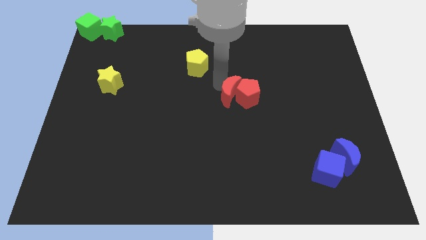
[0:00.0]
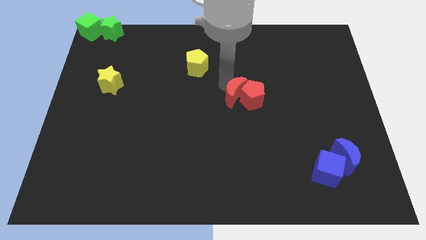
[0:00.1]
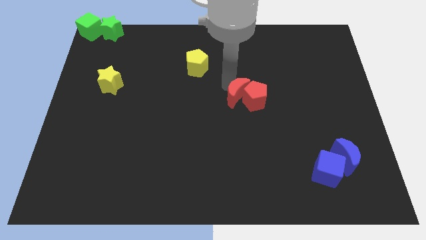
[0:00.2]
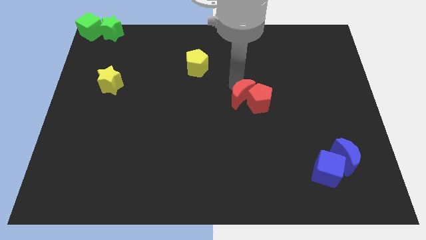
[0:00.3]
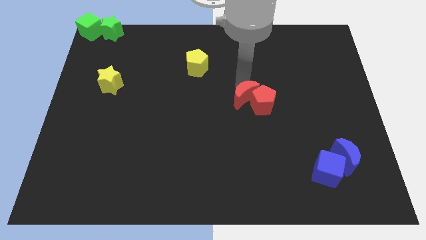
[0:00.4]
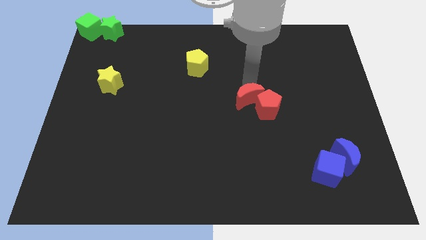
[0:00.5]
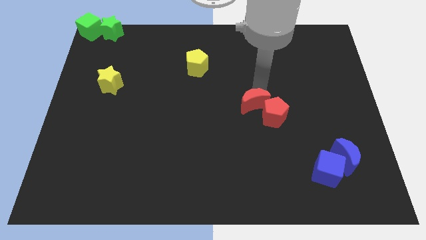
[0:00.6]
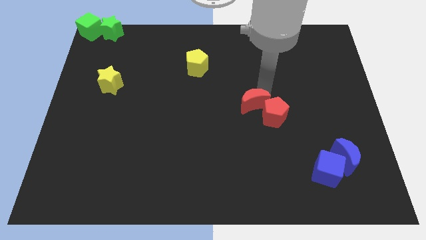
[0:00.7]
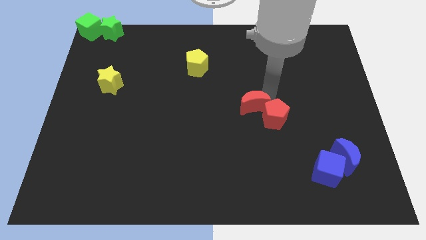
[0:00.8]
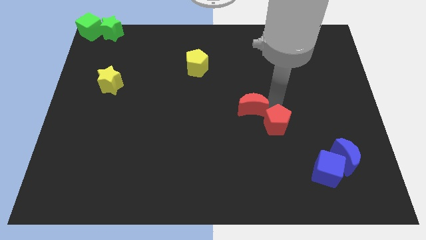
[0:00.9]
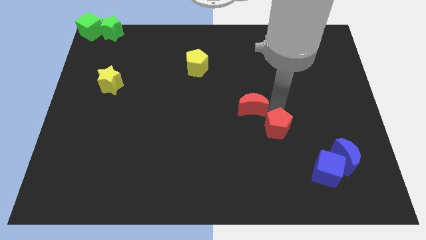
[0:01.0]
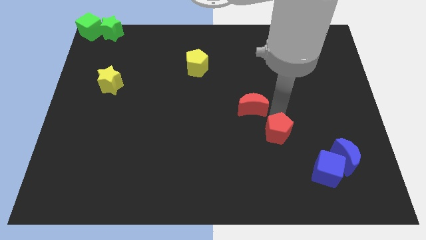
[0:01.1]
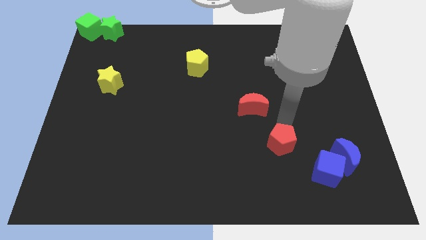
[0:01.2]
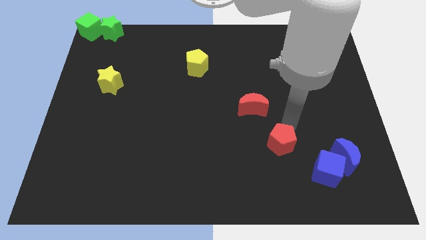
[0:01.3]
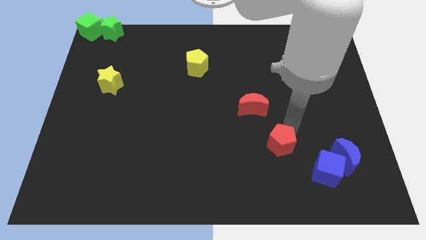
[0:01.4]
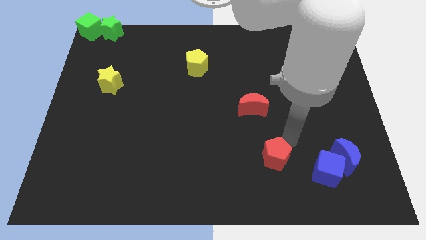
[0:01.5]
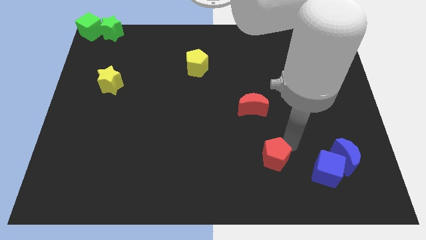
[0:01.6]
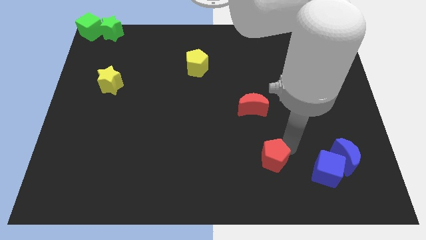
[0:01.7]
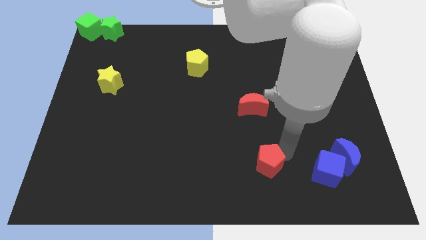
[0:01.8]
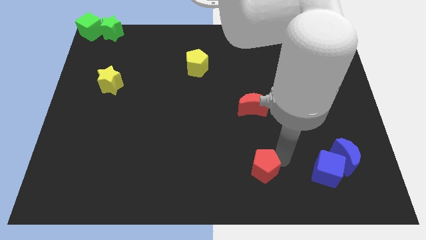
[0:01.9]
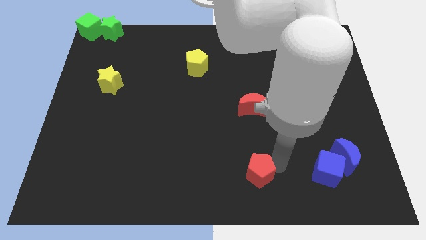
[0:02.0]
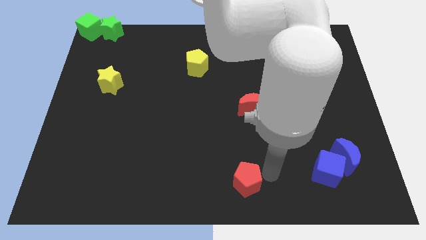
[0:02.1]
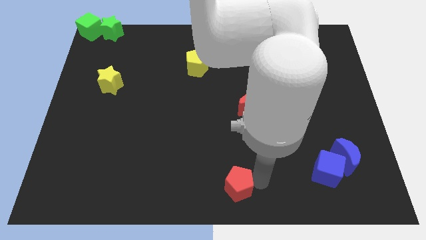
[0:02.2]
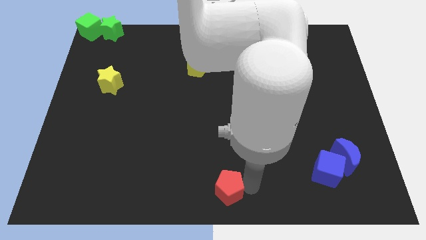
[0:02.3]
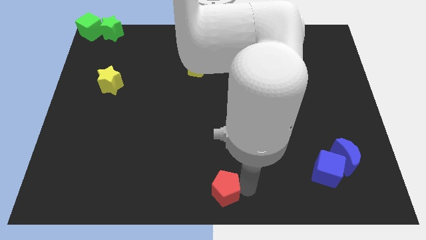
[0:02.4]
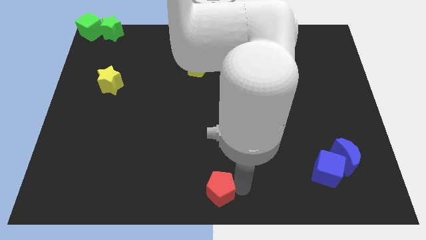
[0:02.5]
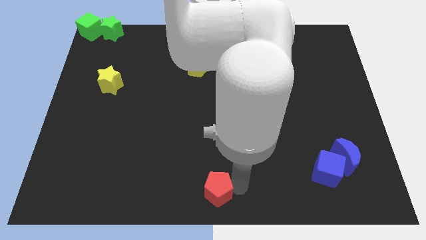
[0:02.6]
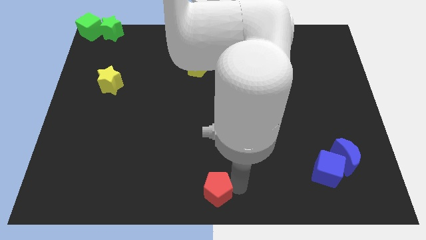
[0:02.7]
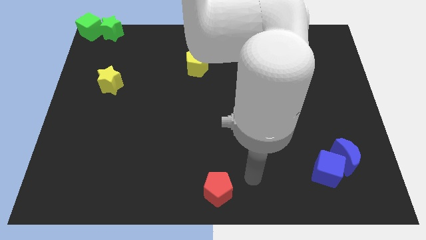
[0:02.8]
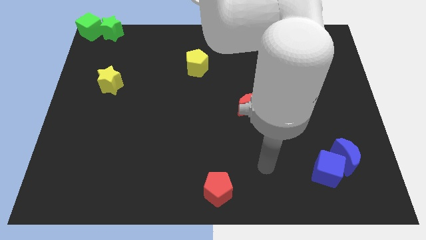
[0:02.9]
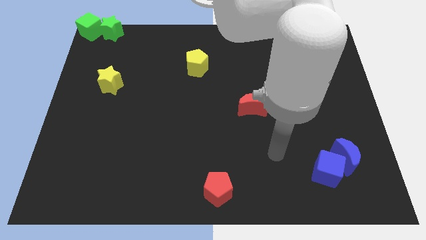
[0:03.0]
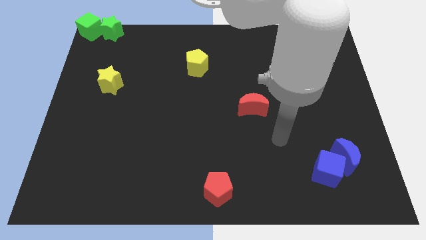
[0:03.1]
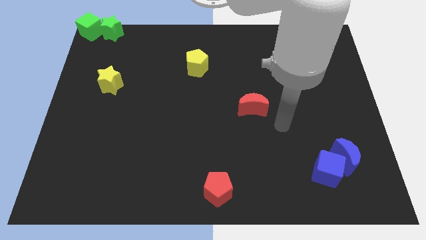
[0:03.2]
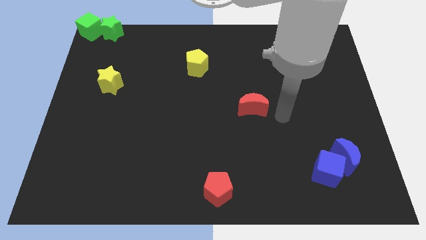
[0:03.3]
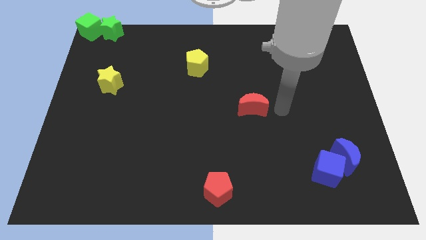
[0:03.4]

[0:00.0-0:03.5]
move the red pentagon to the bottom center of the board

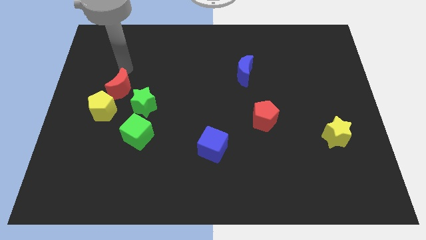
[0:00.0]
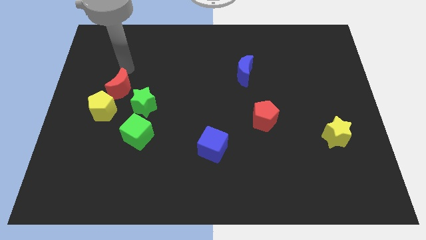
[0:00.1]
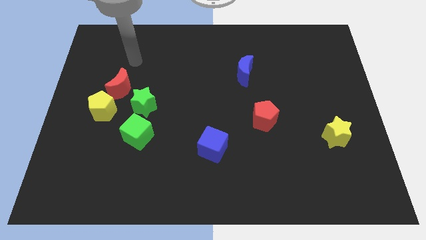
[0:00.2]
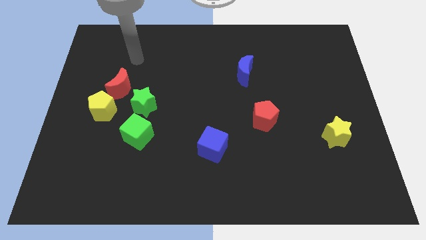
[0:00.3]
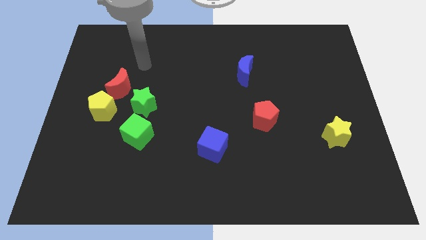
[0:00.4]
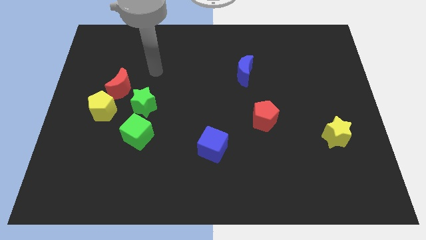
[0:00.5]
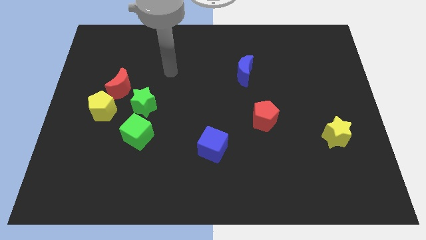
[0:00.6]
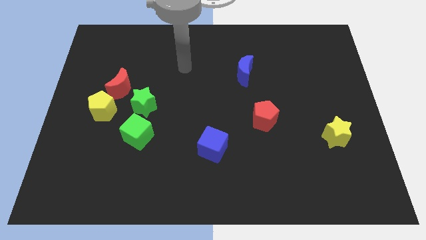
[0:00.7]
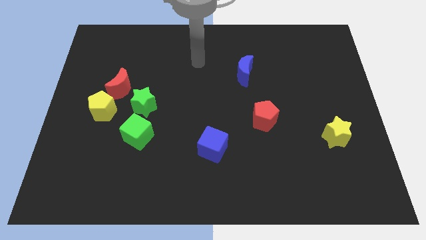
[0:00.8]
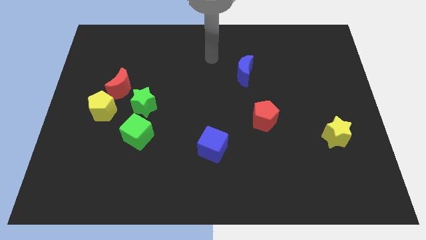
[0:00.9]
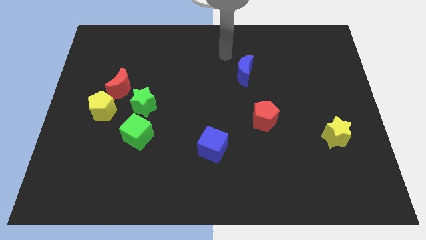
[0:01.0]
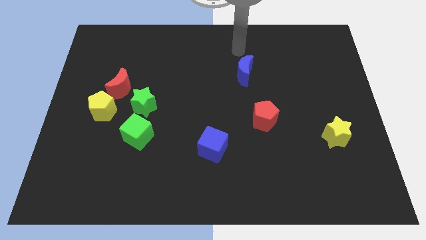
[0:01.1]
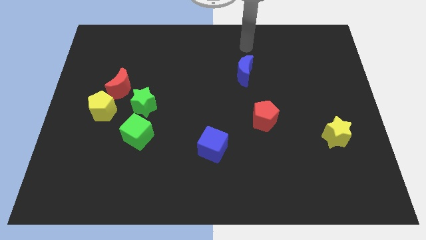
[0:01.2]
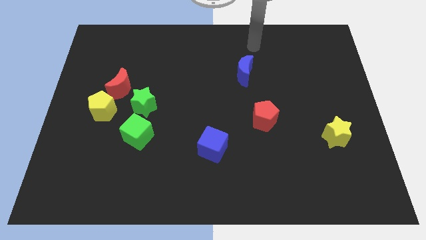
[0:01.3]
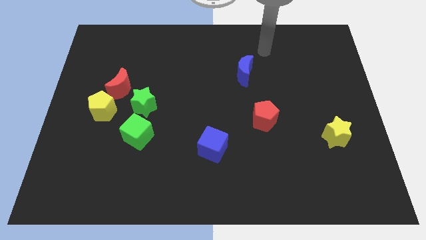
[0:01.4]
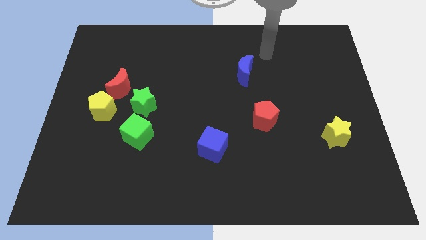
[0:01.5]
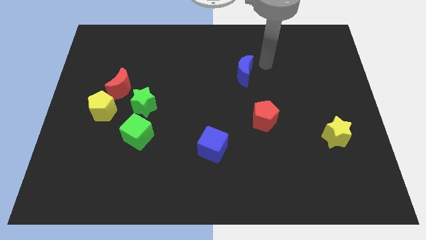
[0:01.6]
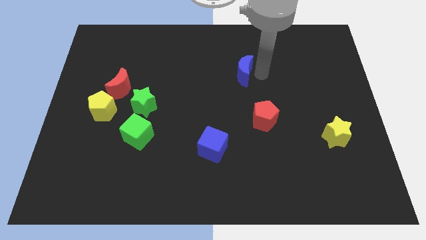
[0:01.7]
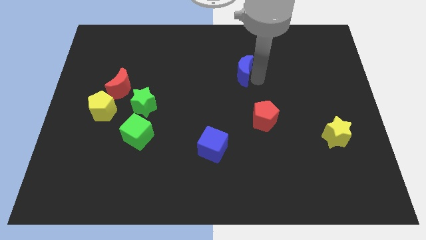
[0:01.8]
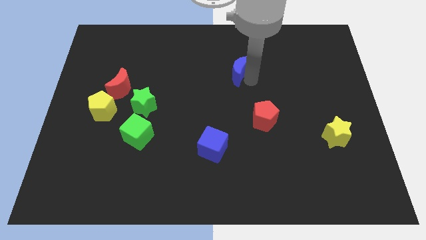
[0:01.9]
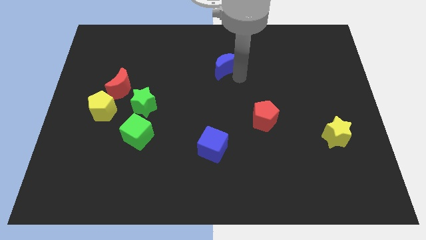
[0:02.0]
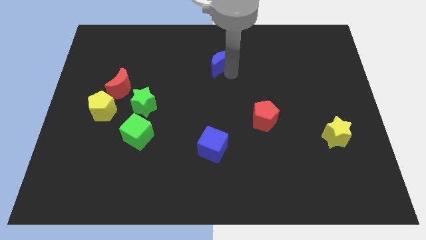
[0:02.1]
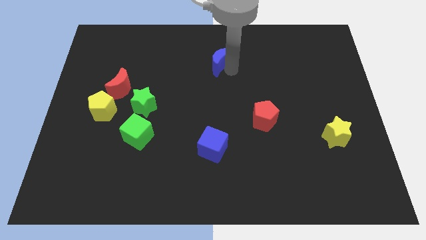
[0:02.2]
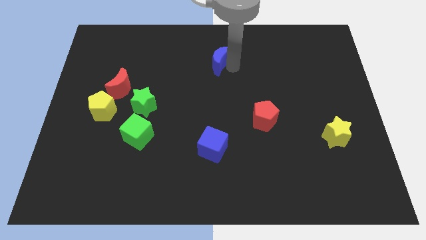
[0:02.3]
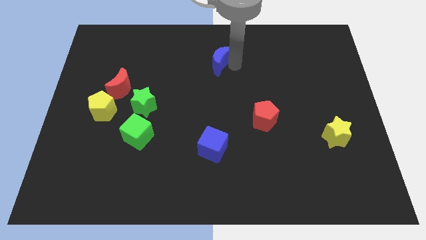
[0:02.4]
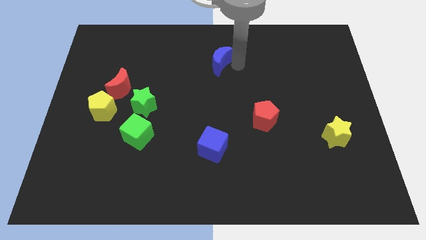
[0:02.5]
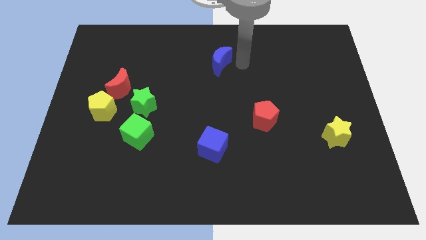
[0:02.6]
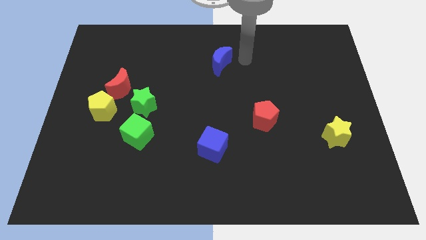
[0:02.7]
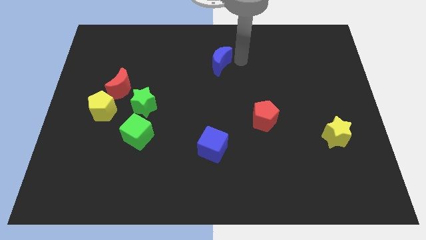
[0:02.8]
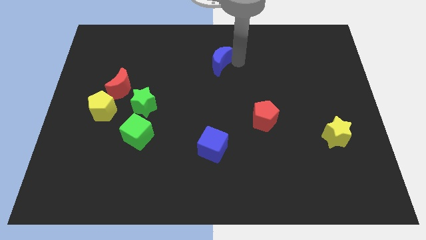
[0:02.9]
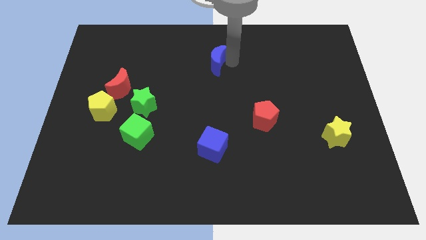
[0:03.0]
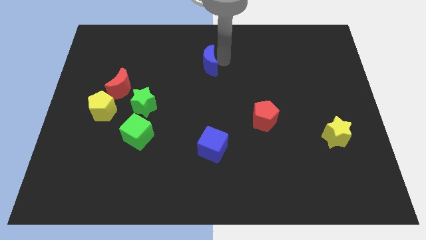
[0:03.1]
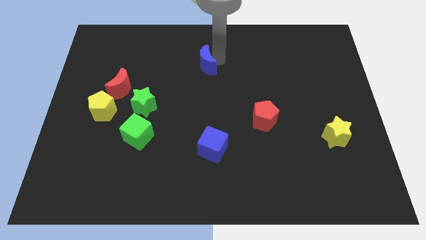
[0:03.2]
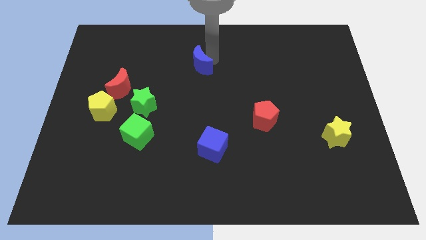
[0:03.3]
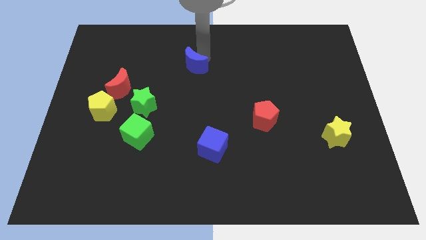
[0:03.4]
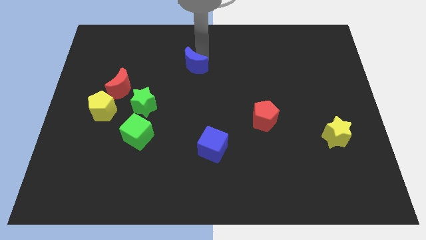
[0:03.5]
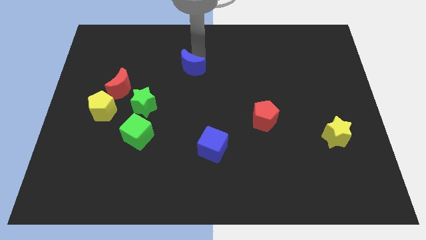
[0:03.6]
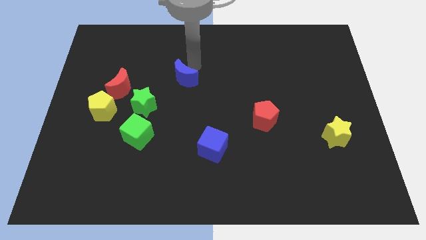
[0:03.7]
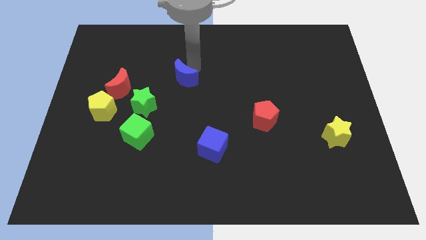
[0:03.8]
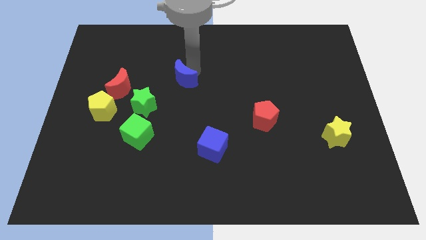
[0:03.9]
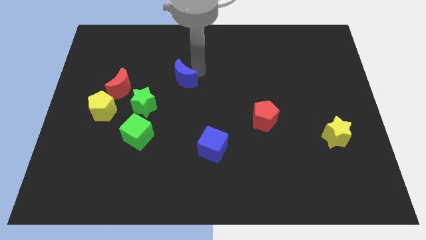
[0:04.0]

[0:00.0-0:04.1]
place blue moon to top right of green star

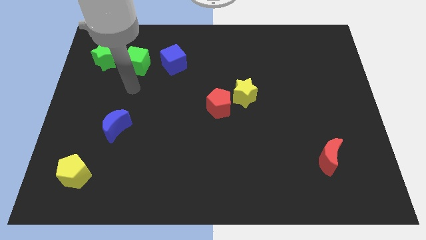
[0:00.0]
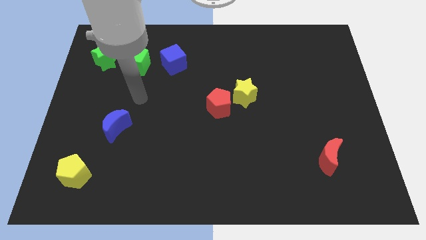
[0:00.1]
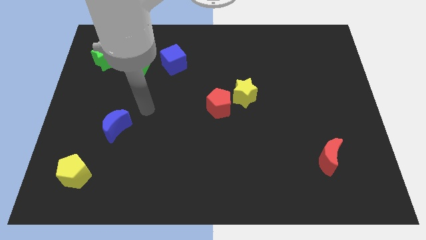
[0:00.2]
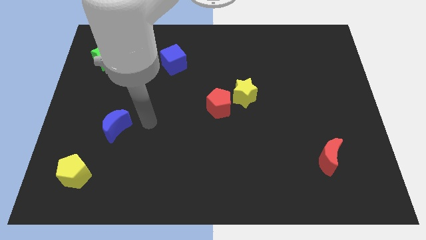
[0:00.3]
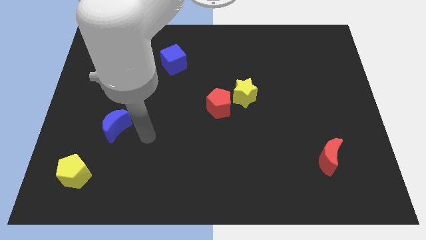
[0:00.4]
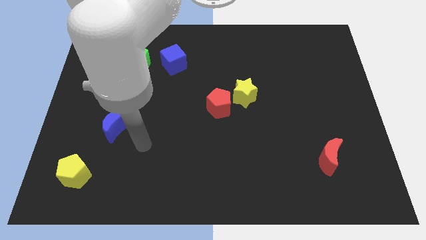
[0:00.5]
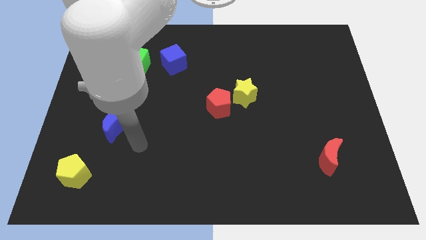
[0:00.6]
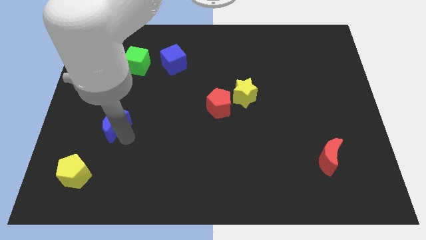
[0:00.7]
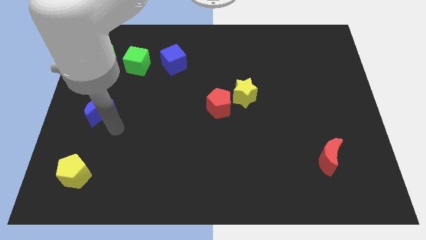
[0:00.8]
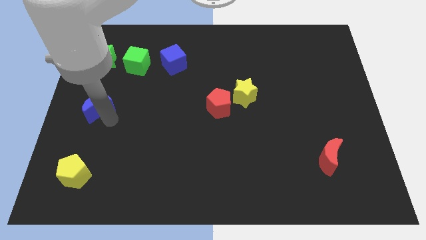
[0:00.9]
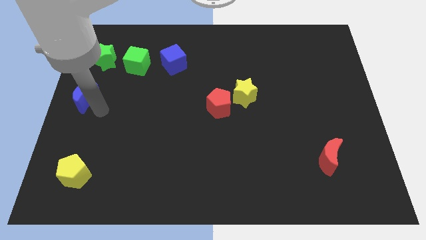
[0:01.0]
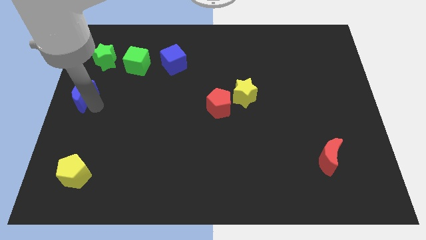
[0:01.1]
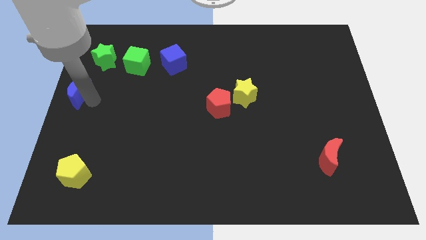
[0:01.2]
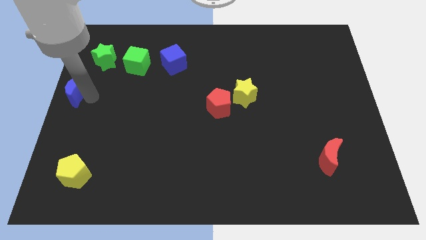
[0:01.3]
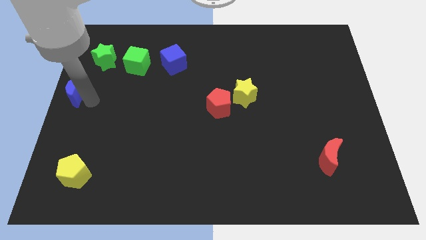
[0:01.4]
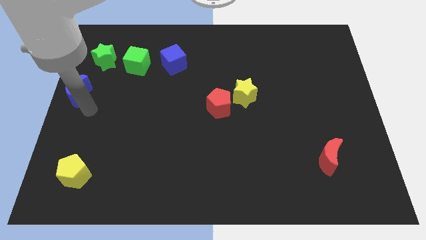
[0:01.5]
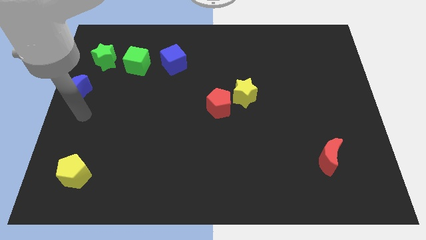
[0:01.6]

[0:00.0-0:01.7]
push the blue moon to the left side of the board
